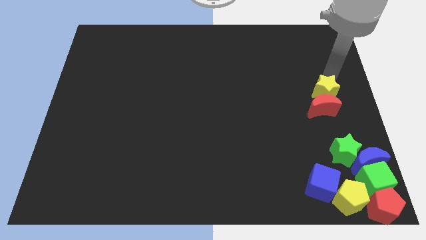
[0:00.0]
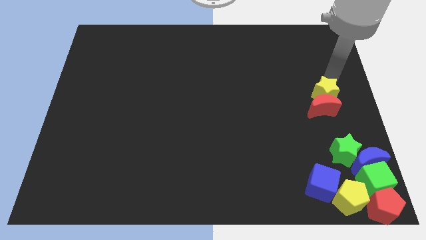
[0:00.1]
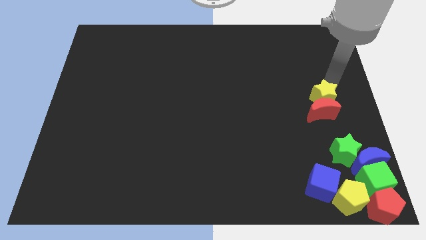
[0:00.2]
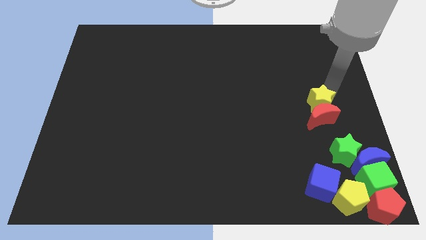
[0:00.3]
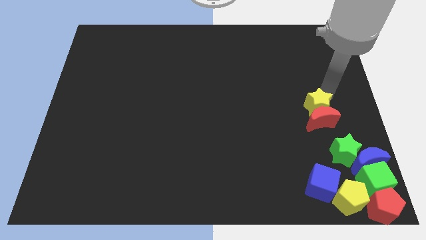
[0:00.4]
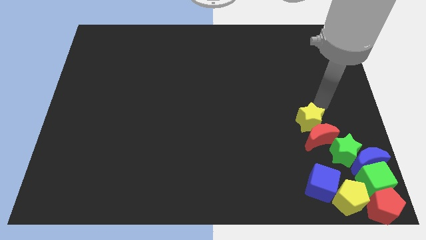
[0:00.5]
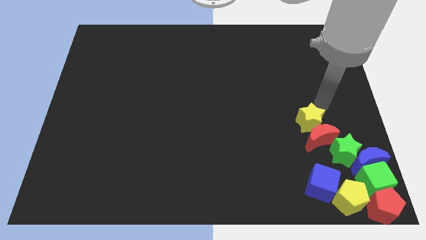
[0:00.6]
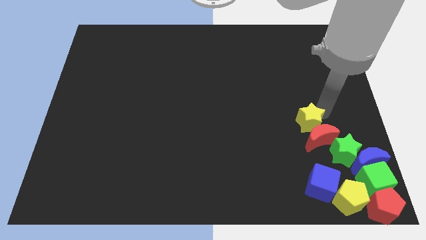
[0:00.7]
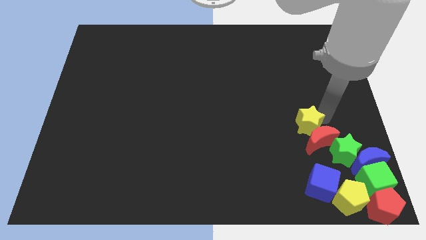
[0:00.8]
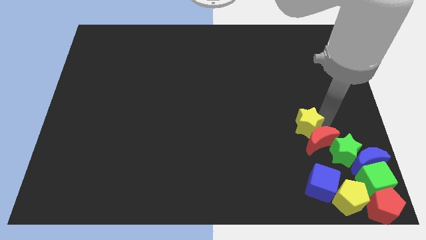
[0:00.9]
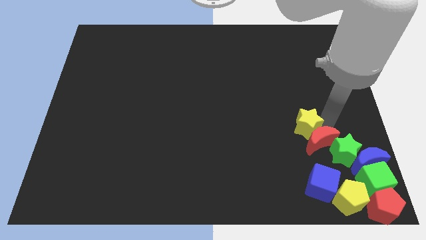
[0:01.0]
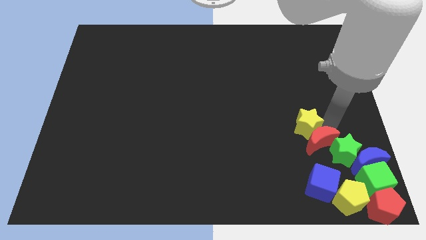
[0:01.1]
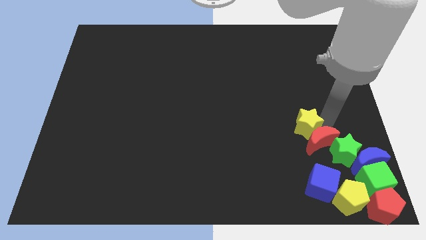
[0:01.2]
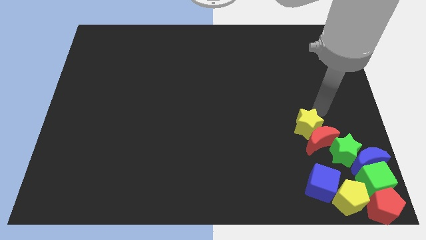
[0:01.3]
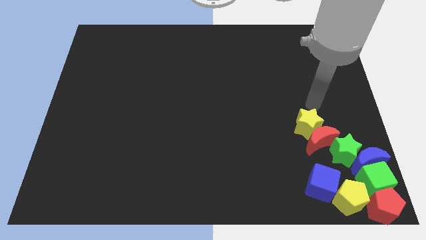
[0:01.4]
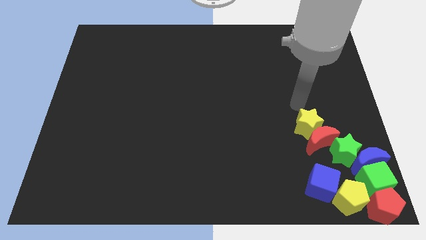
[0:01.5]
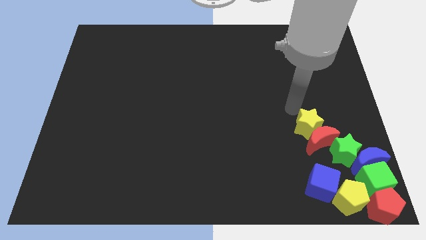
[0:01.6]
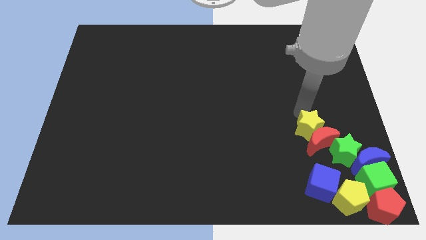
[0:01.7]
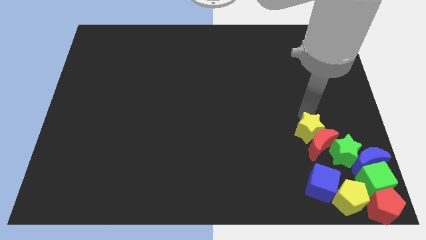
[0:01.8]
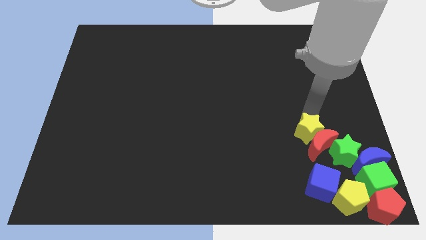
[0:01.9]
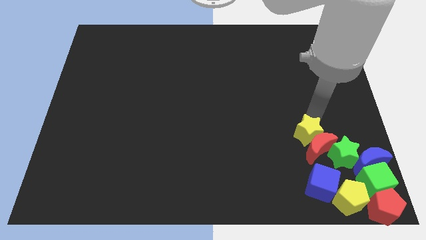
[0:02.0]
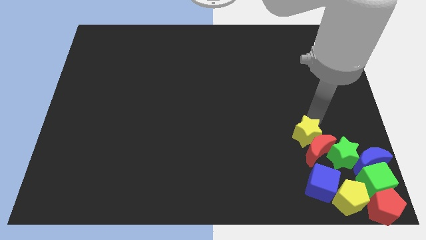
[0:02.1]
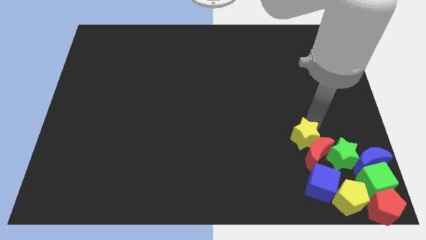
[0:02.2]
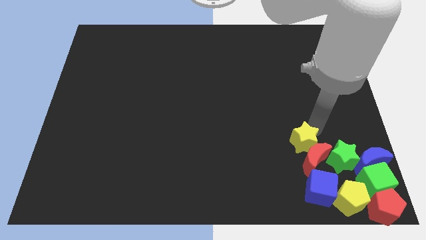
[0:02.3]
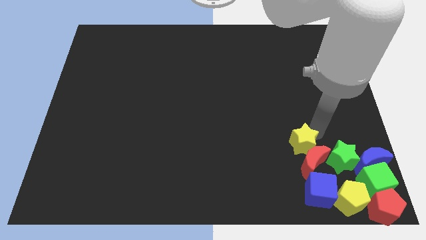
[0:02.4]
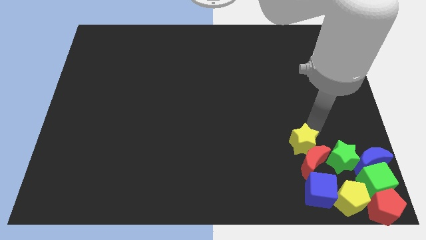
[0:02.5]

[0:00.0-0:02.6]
push yellow star and red crescent into the group of blocks

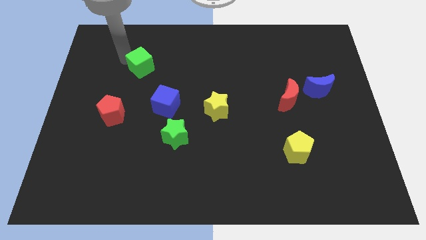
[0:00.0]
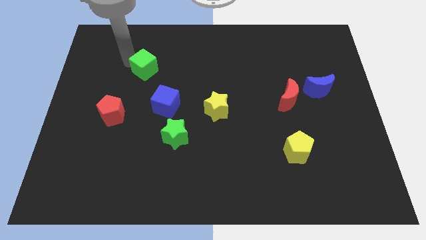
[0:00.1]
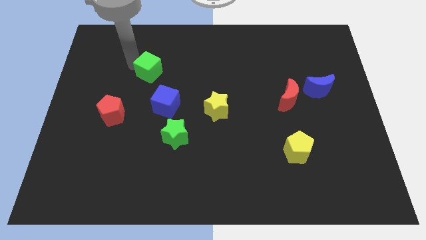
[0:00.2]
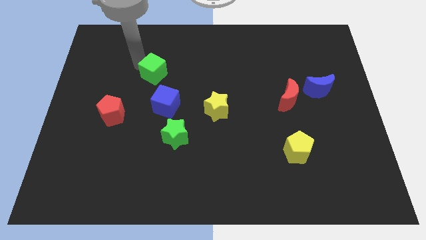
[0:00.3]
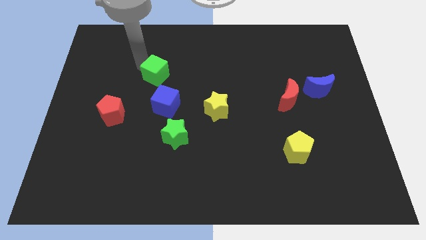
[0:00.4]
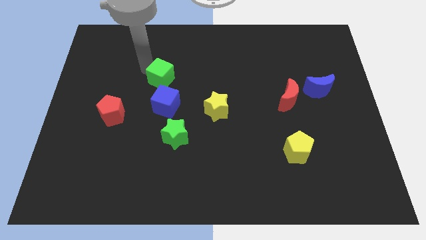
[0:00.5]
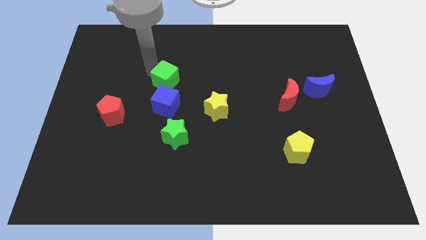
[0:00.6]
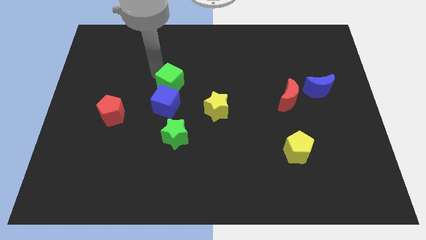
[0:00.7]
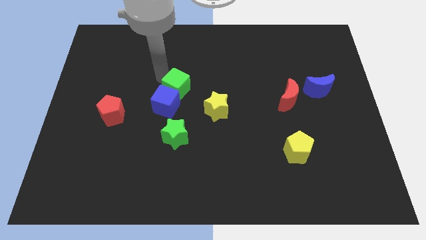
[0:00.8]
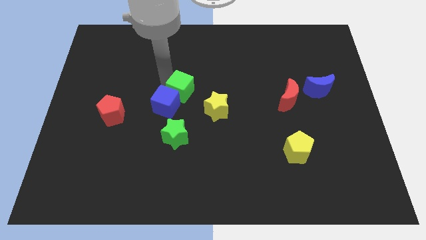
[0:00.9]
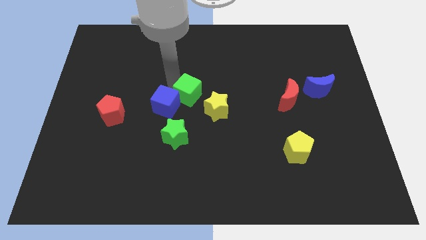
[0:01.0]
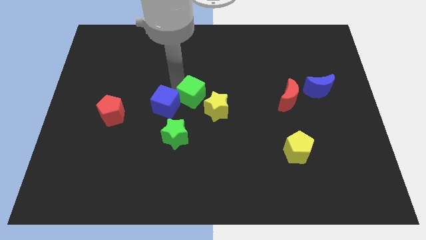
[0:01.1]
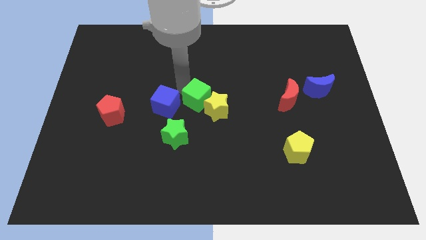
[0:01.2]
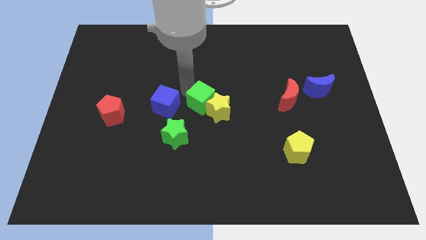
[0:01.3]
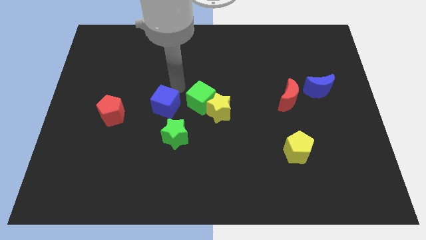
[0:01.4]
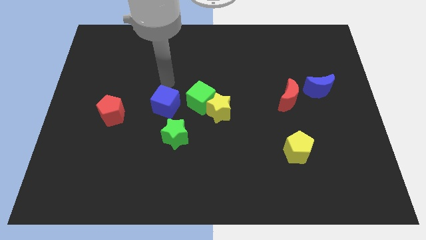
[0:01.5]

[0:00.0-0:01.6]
push green cube into the yellow star

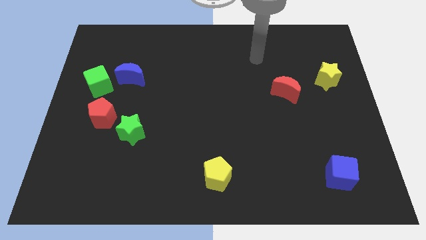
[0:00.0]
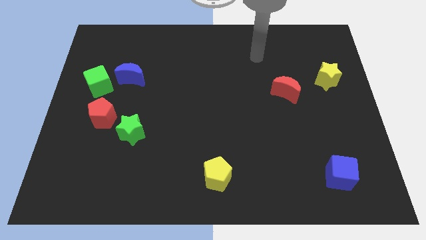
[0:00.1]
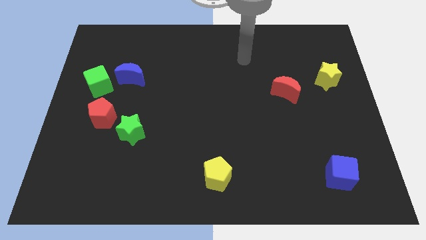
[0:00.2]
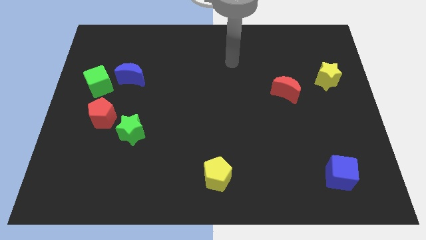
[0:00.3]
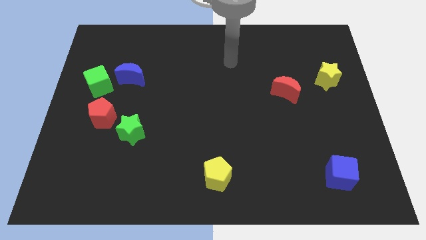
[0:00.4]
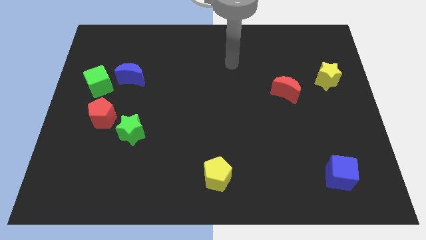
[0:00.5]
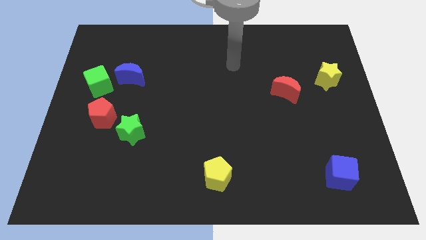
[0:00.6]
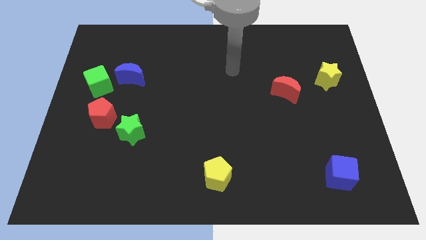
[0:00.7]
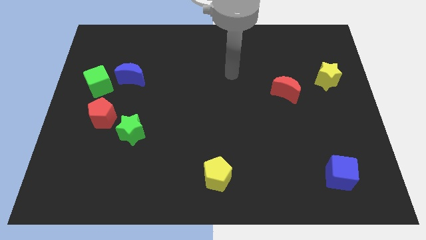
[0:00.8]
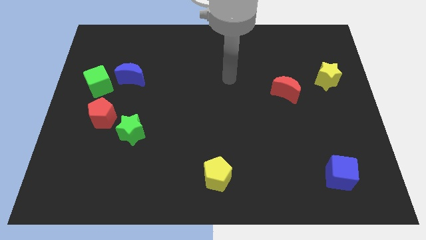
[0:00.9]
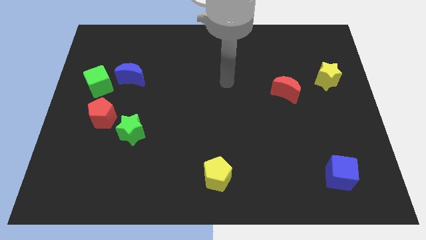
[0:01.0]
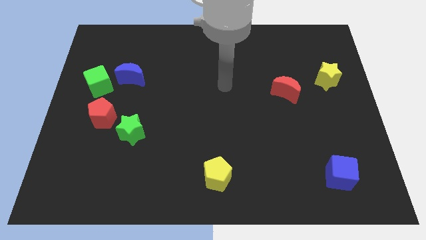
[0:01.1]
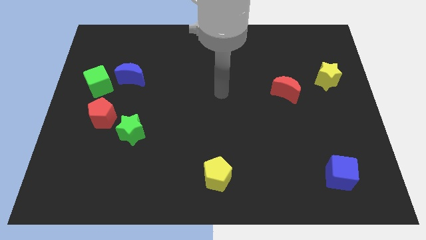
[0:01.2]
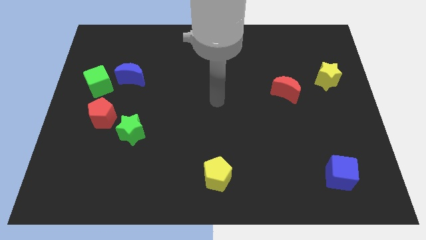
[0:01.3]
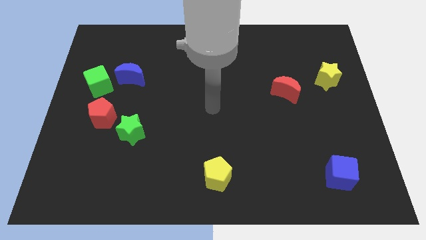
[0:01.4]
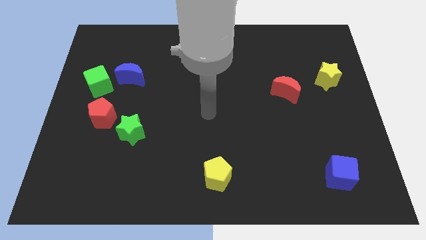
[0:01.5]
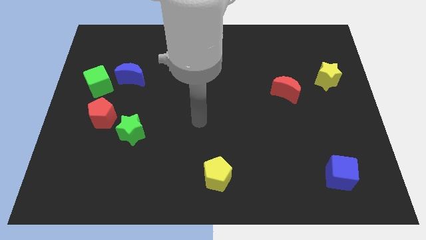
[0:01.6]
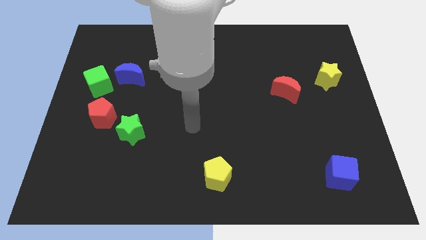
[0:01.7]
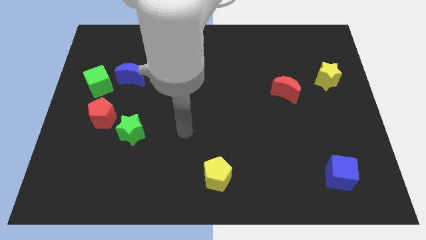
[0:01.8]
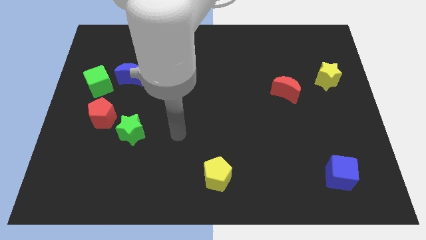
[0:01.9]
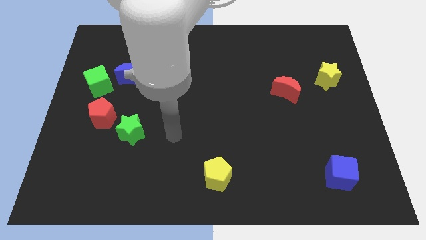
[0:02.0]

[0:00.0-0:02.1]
place the arm to the right of the green star

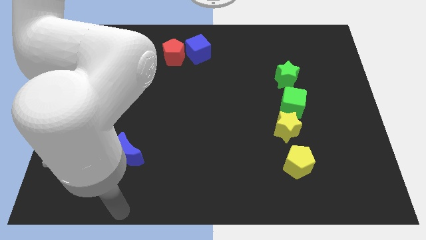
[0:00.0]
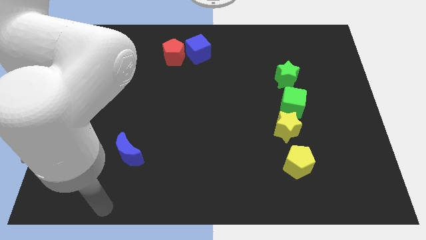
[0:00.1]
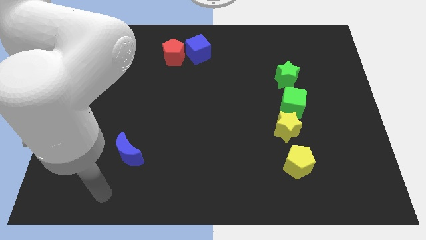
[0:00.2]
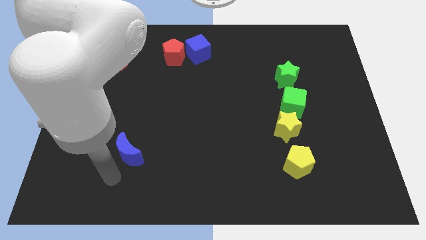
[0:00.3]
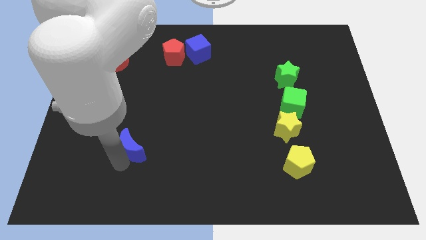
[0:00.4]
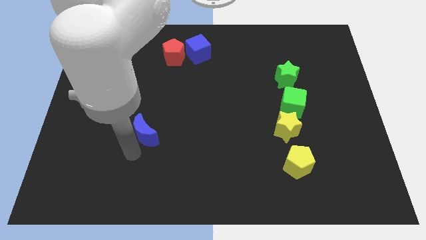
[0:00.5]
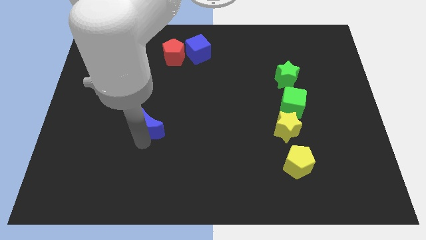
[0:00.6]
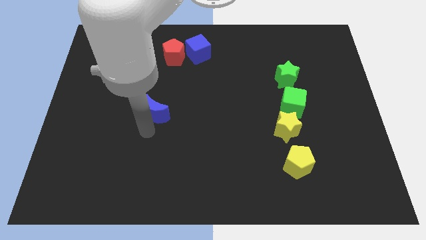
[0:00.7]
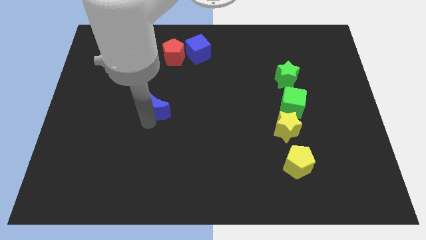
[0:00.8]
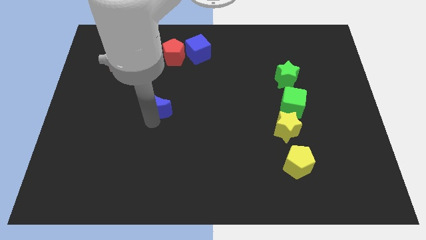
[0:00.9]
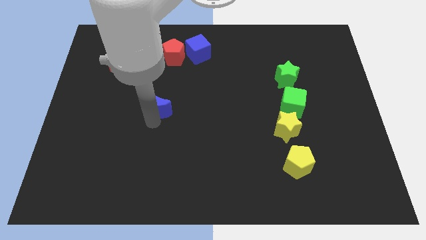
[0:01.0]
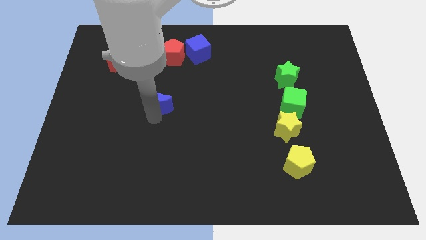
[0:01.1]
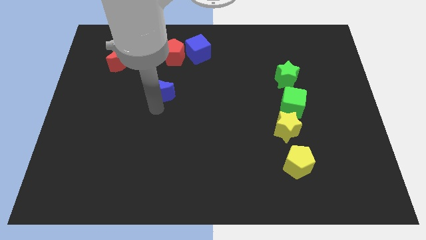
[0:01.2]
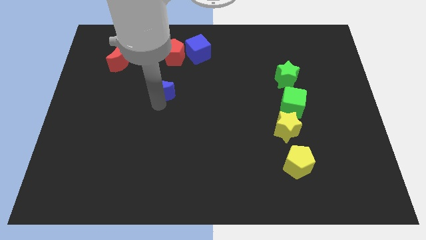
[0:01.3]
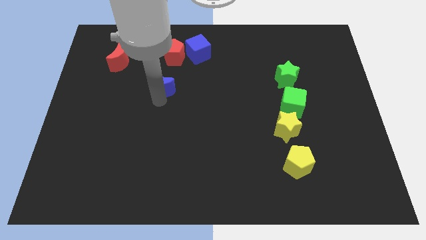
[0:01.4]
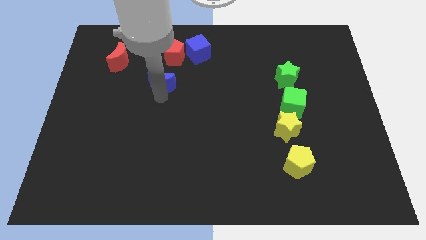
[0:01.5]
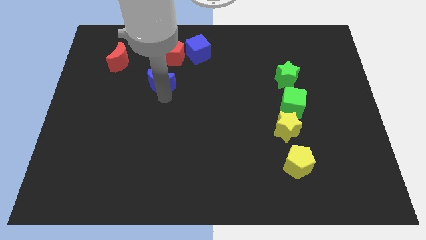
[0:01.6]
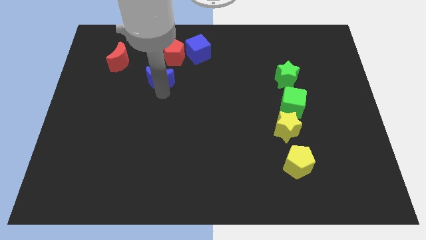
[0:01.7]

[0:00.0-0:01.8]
take the blue crescent towards the bottom side of the red pentagon

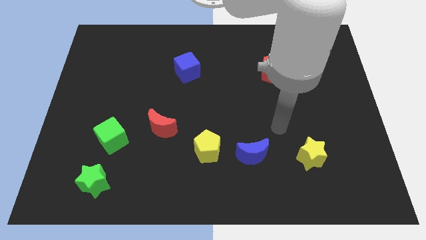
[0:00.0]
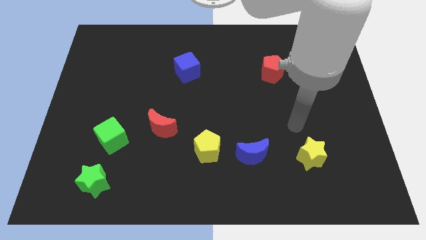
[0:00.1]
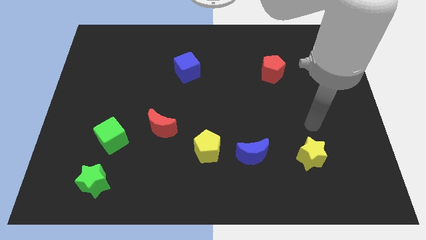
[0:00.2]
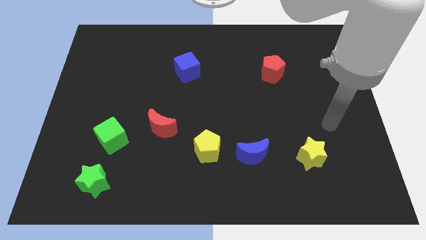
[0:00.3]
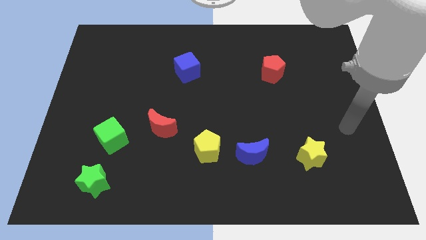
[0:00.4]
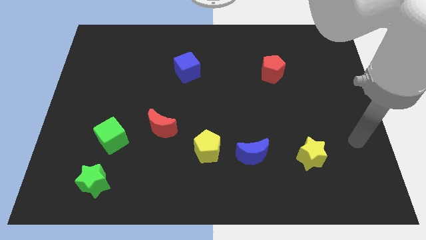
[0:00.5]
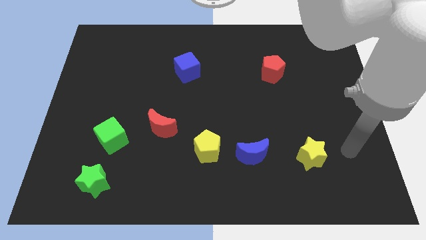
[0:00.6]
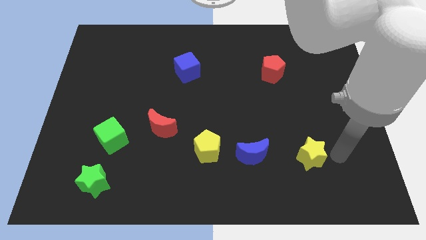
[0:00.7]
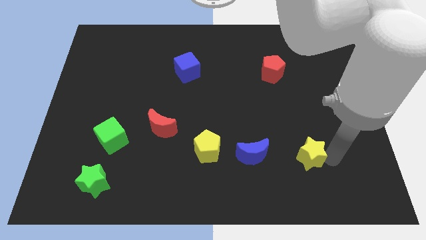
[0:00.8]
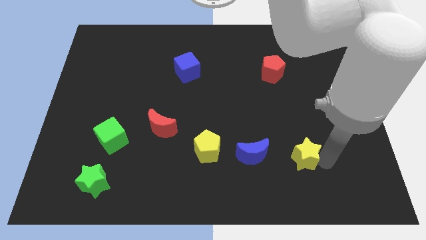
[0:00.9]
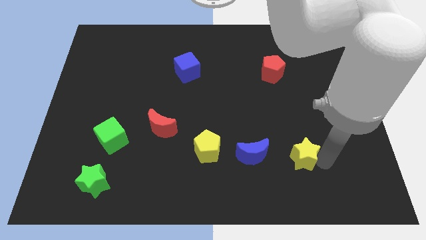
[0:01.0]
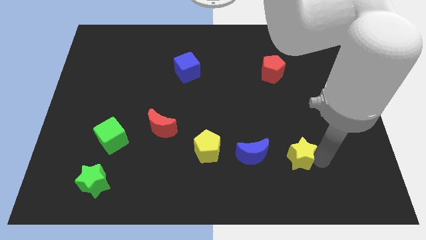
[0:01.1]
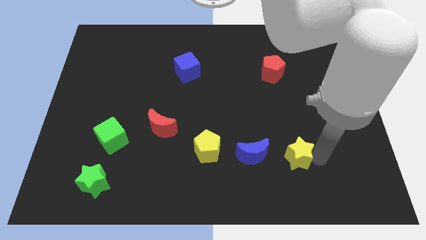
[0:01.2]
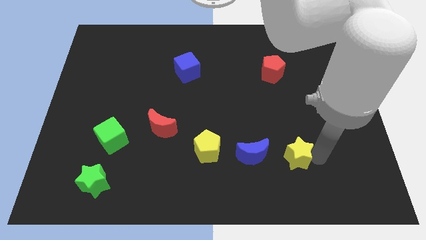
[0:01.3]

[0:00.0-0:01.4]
move yellow star slightly left
